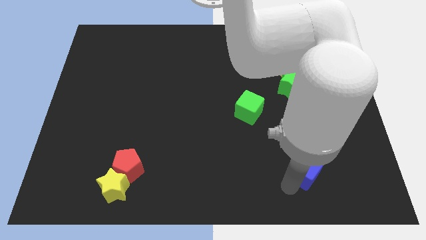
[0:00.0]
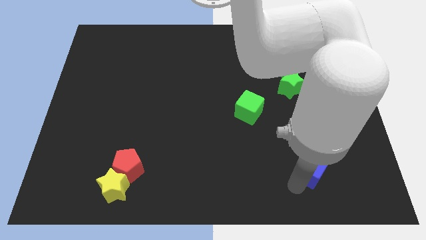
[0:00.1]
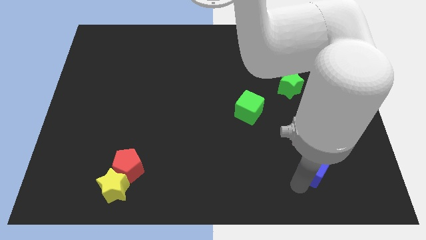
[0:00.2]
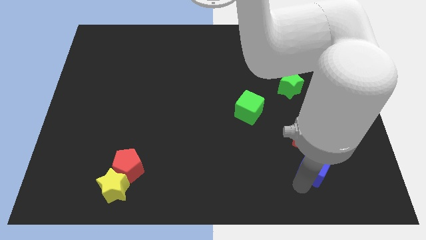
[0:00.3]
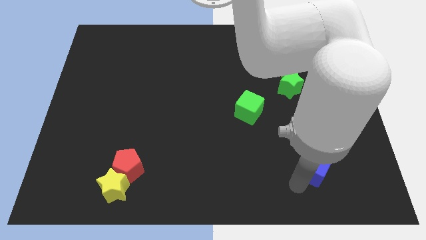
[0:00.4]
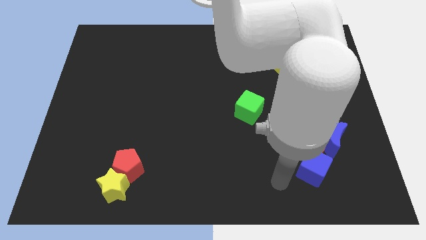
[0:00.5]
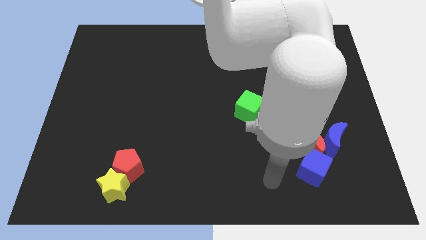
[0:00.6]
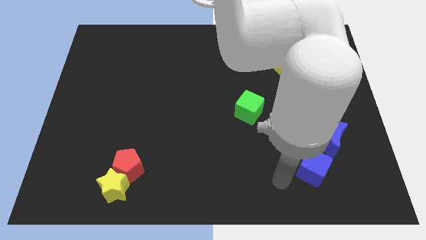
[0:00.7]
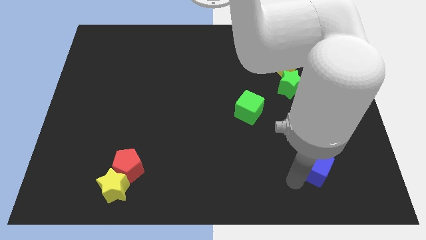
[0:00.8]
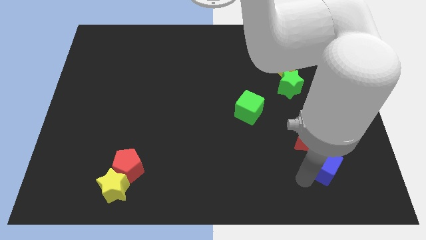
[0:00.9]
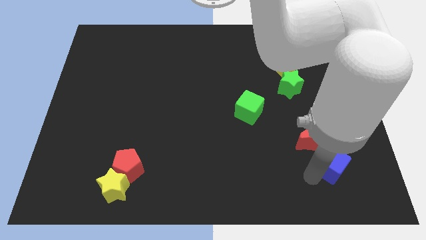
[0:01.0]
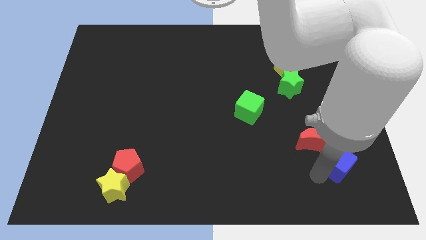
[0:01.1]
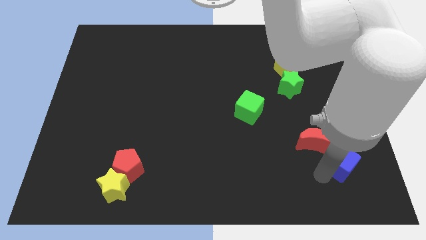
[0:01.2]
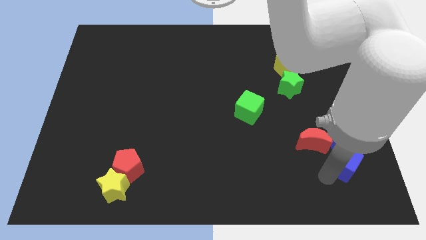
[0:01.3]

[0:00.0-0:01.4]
place the blue cube to the bottom of the blue crescent

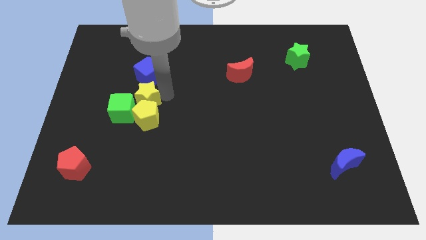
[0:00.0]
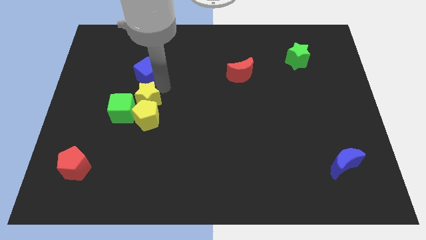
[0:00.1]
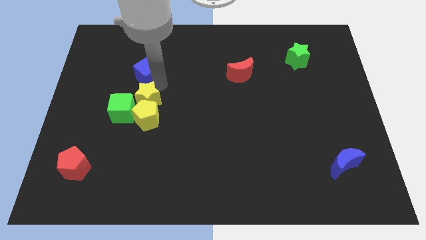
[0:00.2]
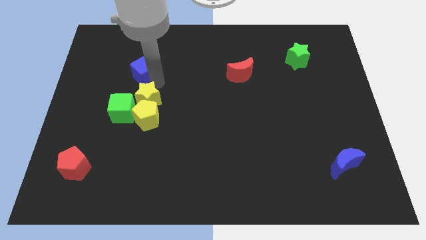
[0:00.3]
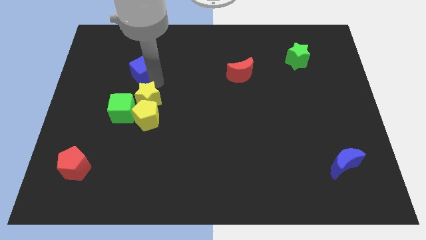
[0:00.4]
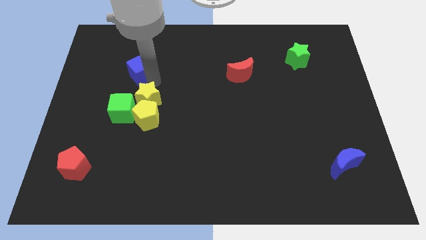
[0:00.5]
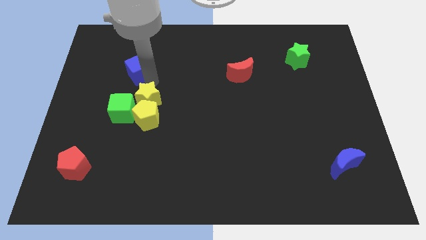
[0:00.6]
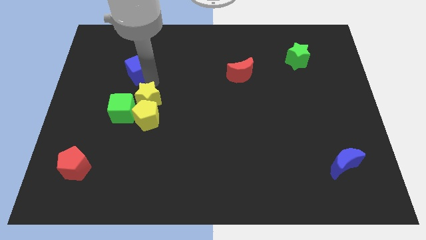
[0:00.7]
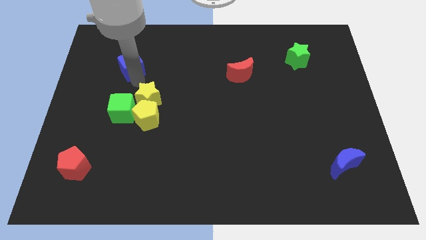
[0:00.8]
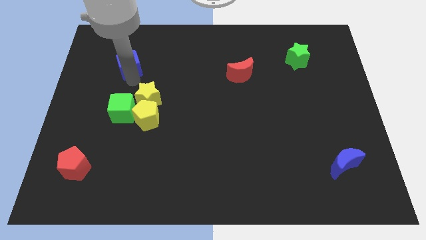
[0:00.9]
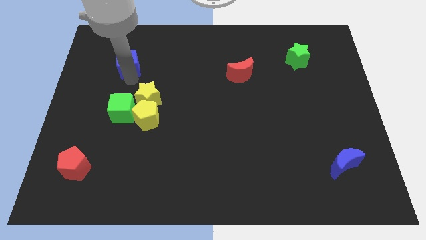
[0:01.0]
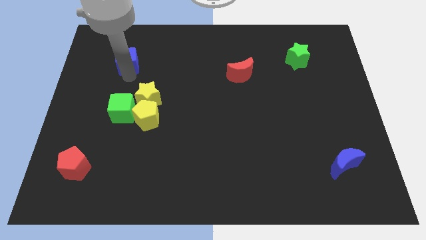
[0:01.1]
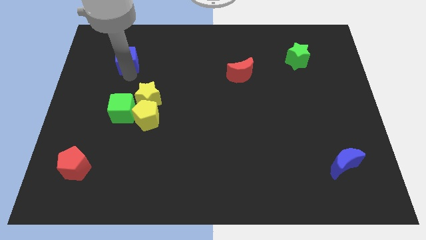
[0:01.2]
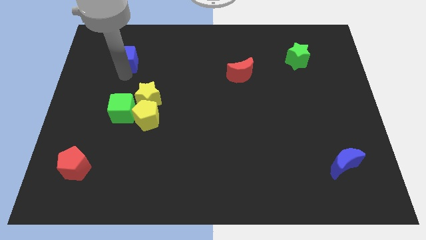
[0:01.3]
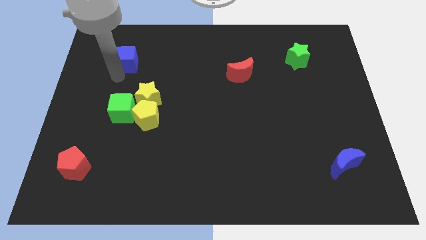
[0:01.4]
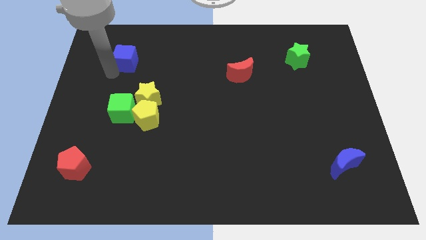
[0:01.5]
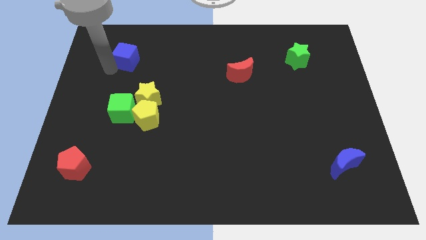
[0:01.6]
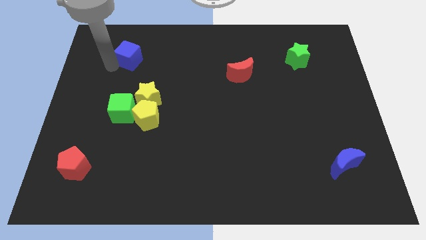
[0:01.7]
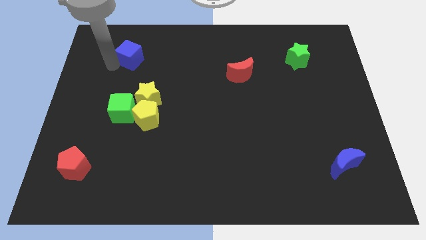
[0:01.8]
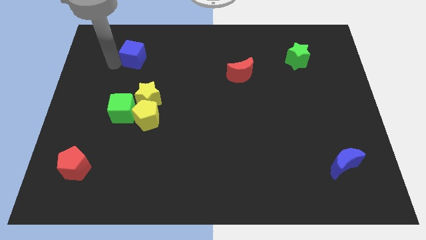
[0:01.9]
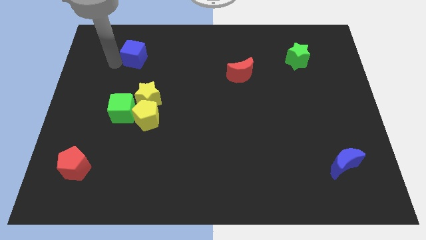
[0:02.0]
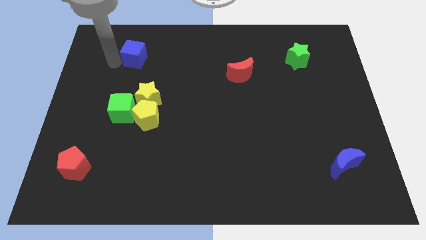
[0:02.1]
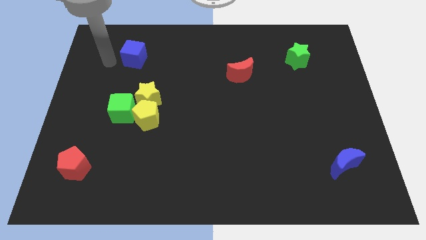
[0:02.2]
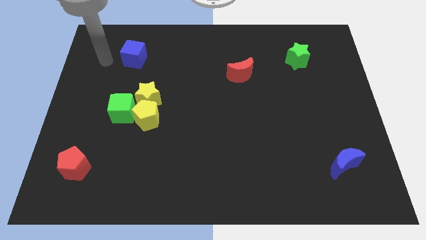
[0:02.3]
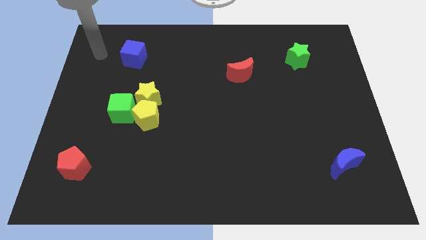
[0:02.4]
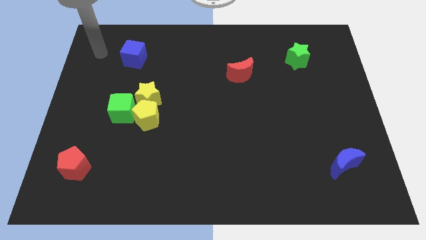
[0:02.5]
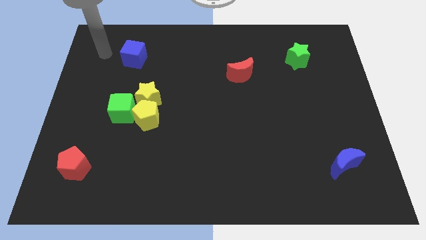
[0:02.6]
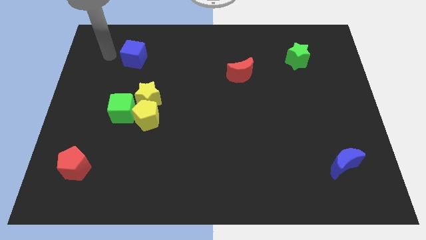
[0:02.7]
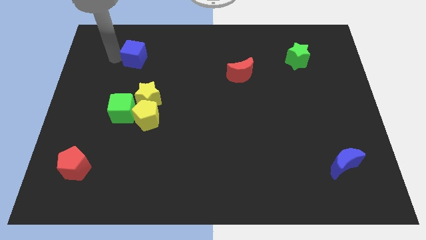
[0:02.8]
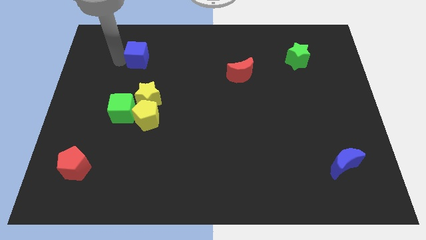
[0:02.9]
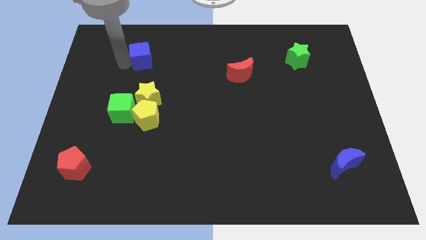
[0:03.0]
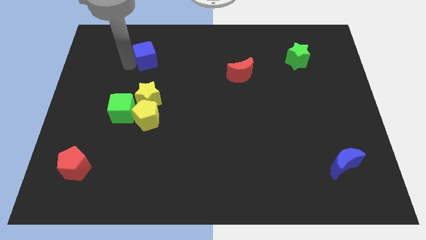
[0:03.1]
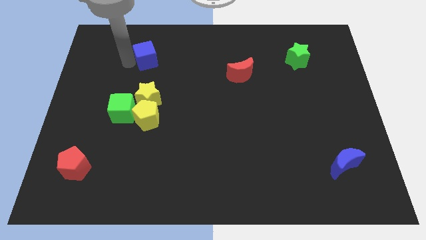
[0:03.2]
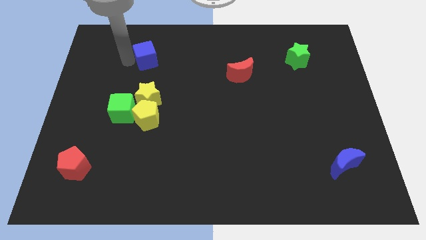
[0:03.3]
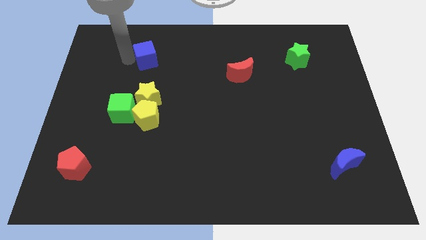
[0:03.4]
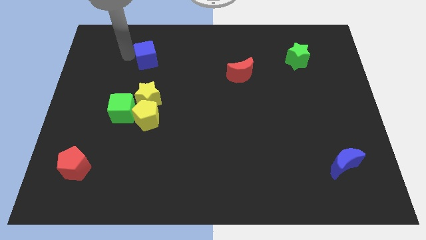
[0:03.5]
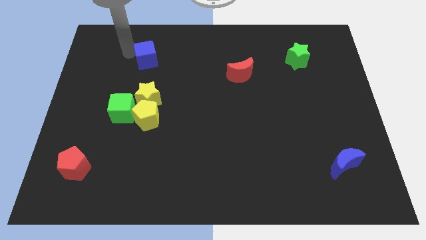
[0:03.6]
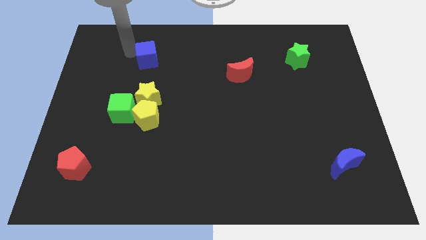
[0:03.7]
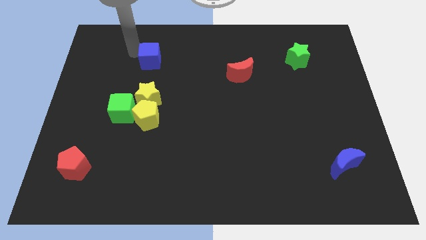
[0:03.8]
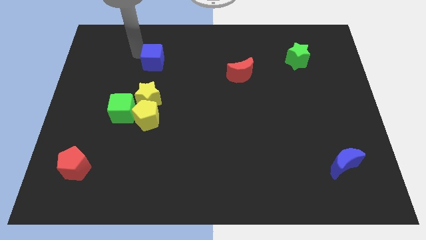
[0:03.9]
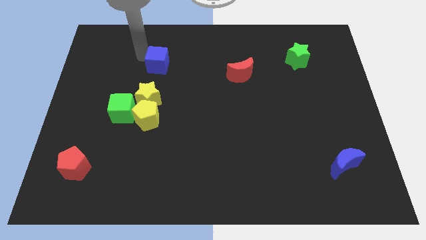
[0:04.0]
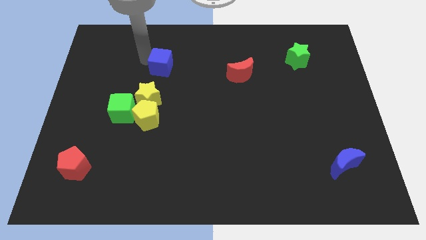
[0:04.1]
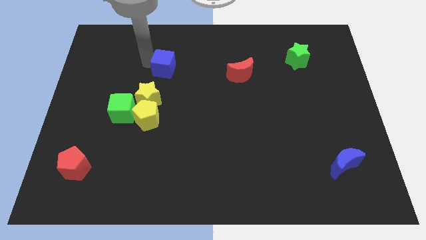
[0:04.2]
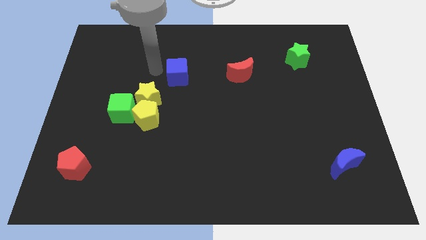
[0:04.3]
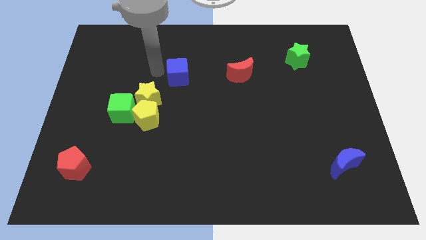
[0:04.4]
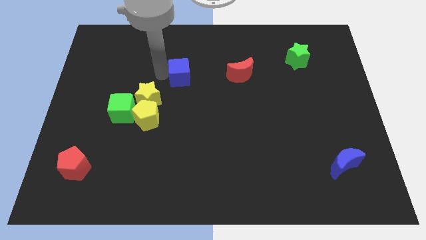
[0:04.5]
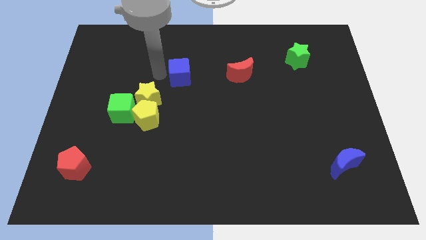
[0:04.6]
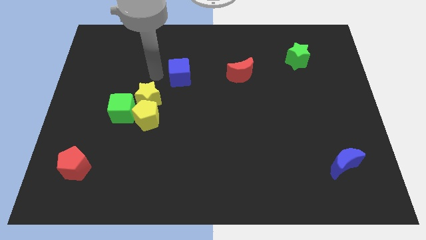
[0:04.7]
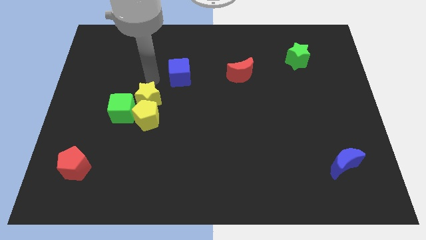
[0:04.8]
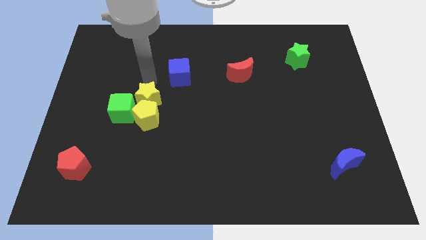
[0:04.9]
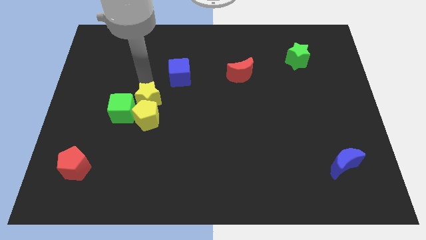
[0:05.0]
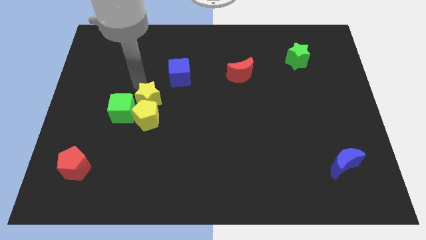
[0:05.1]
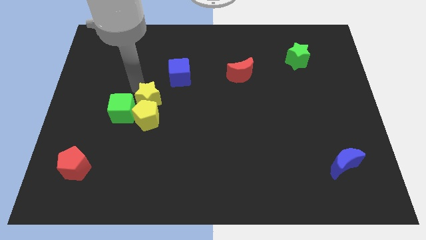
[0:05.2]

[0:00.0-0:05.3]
separate blue cube from the group of blocks

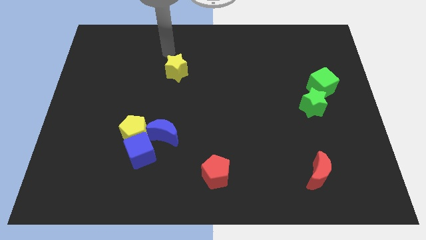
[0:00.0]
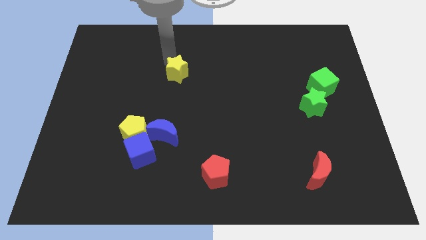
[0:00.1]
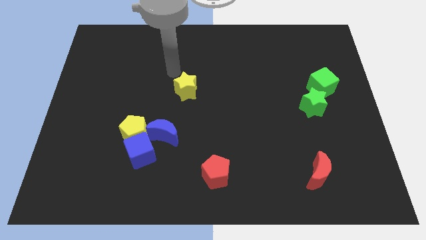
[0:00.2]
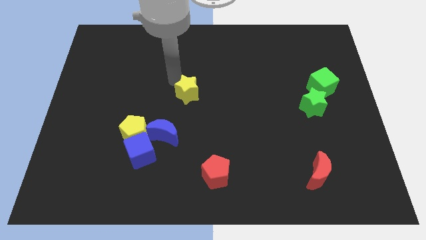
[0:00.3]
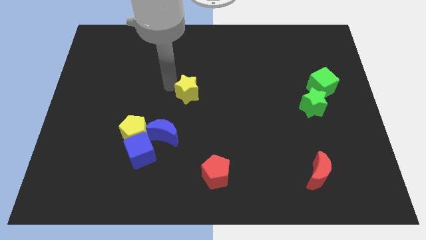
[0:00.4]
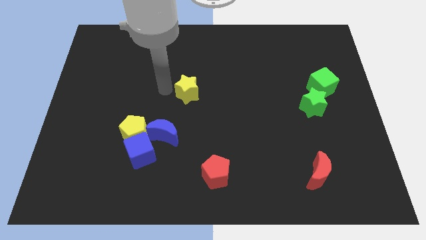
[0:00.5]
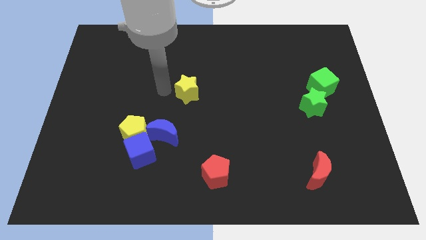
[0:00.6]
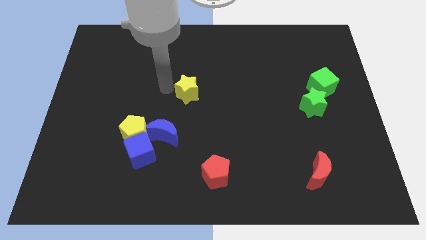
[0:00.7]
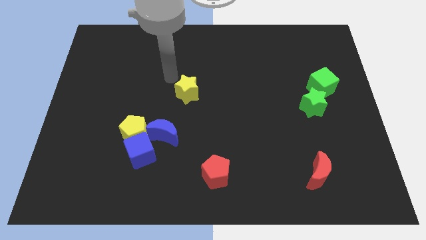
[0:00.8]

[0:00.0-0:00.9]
move the yellow star to the bottom of the board

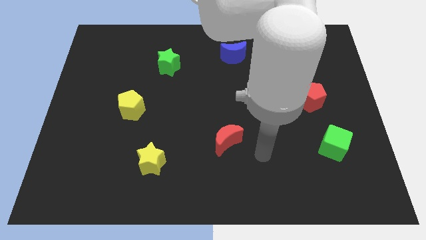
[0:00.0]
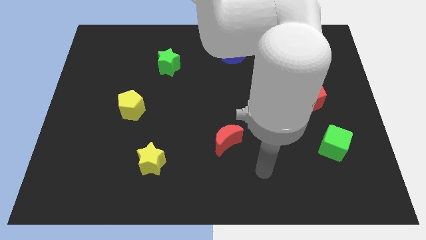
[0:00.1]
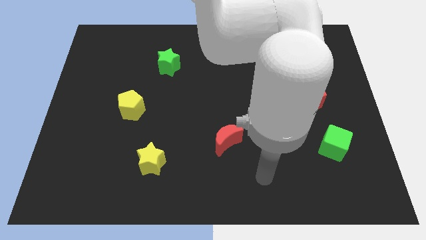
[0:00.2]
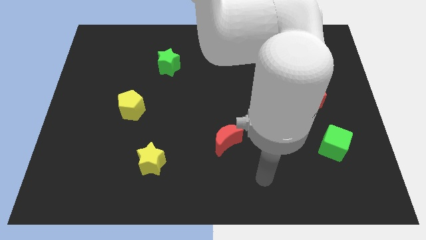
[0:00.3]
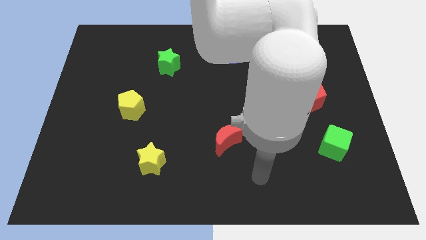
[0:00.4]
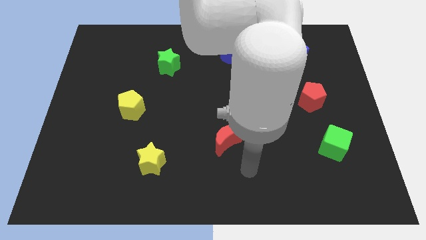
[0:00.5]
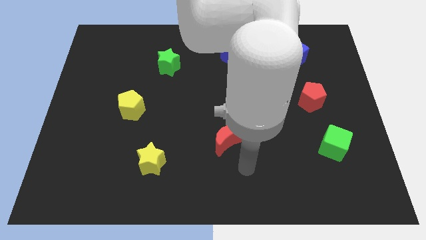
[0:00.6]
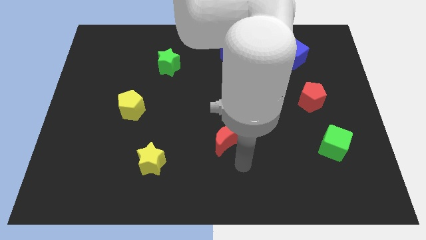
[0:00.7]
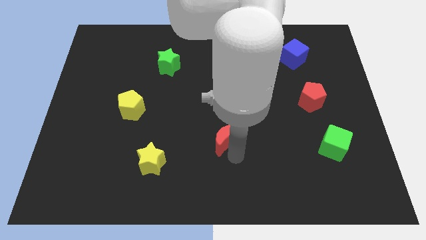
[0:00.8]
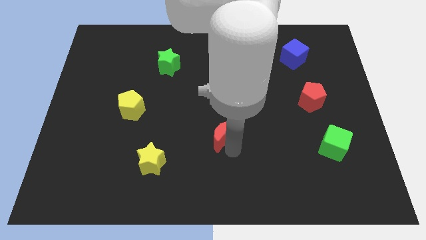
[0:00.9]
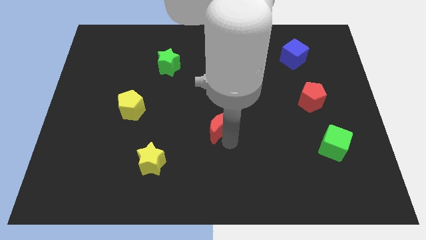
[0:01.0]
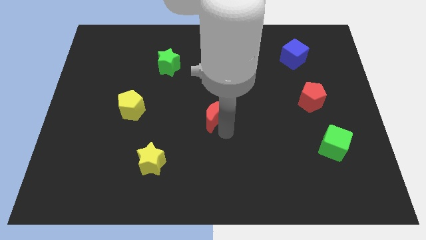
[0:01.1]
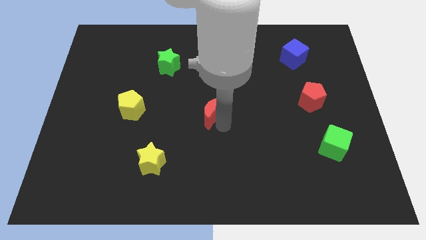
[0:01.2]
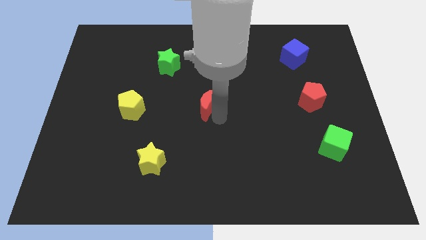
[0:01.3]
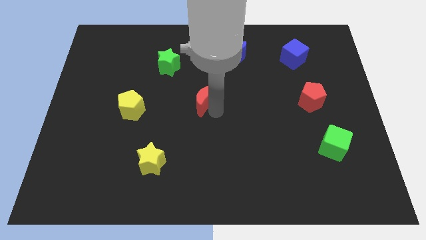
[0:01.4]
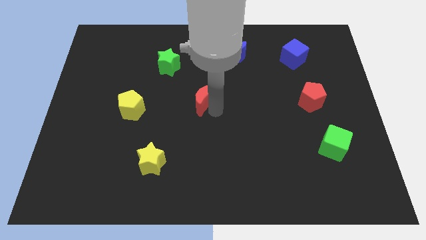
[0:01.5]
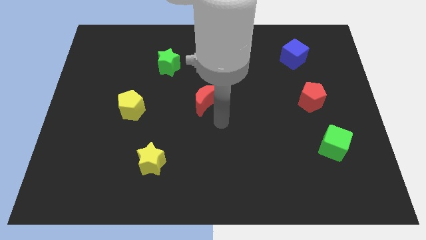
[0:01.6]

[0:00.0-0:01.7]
push red crescent slightly upward
